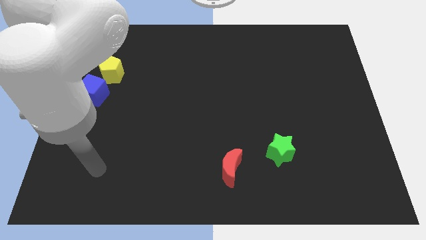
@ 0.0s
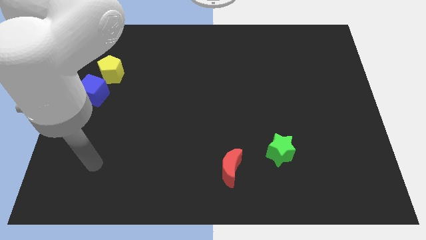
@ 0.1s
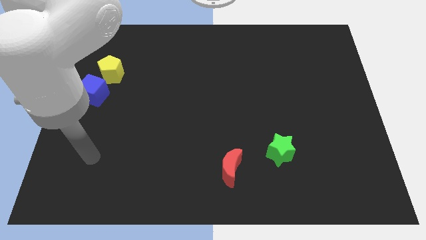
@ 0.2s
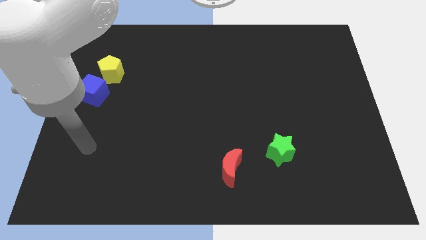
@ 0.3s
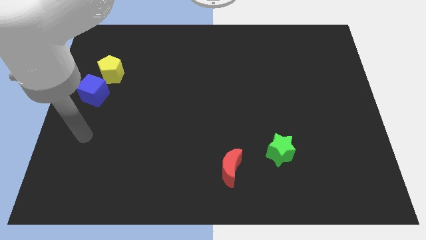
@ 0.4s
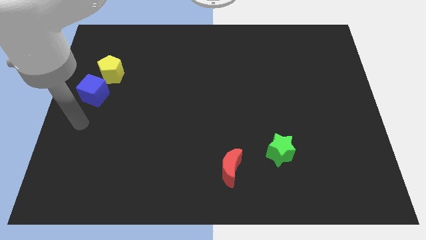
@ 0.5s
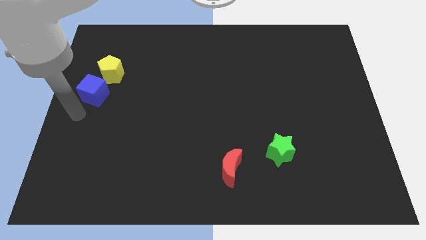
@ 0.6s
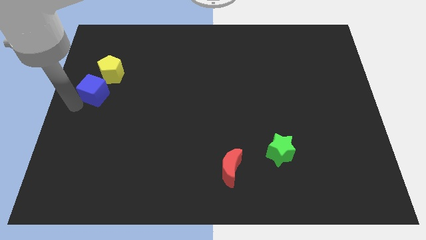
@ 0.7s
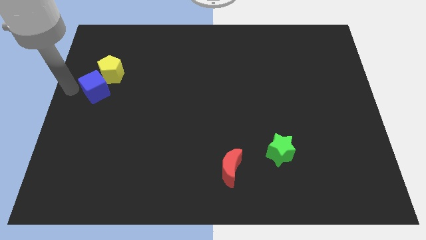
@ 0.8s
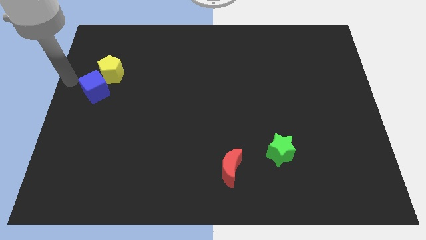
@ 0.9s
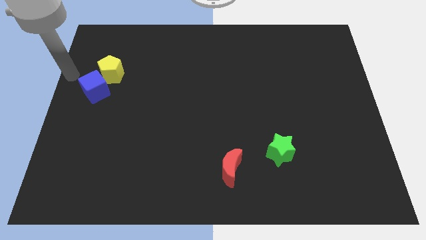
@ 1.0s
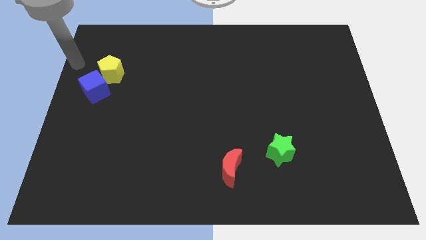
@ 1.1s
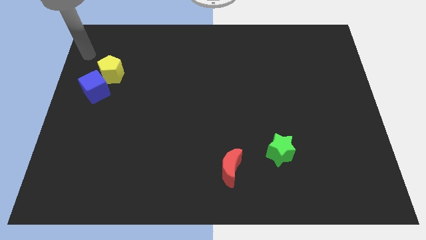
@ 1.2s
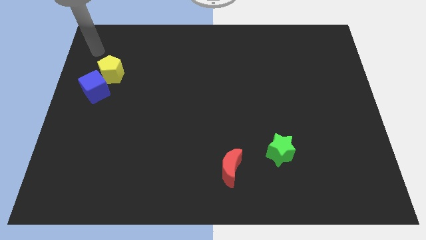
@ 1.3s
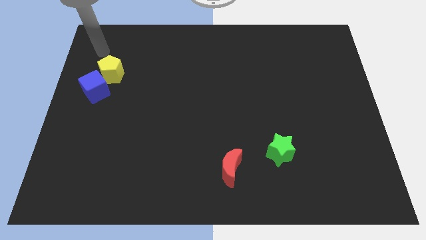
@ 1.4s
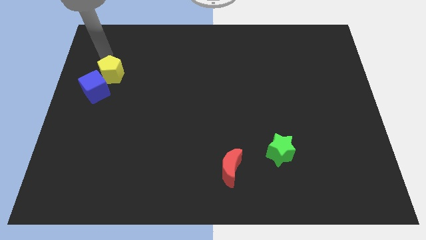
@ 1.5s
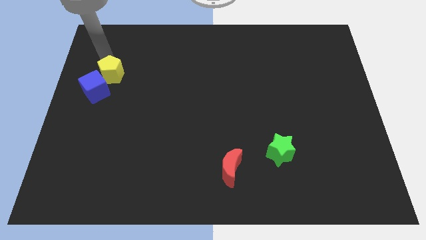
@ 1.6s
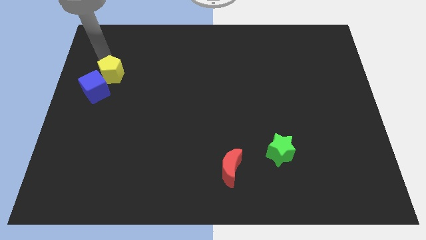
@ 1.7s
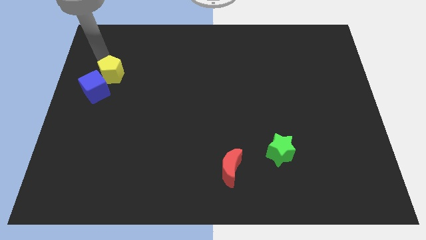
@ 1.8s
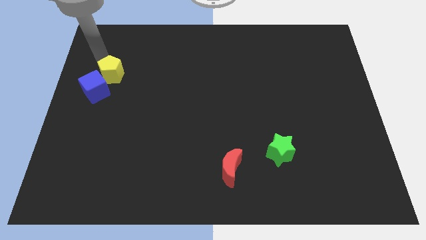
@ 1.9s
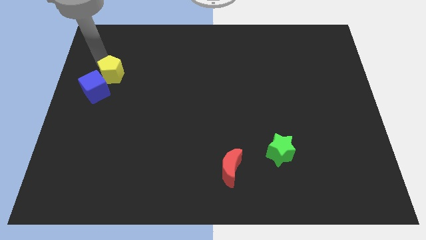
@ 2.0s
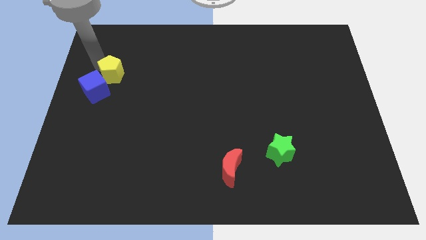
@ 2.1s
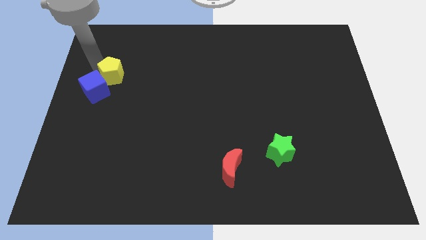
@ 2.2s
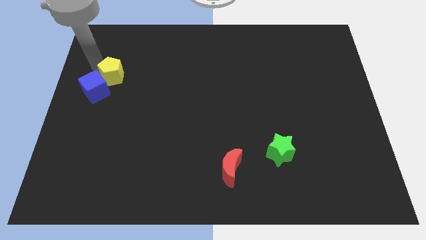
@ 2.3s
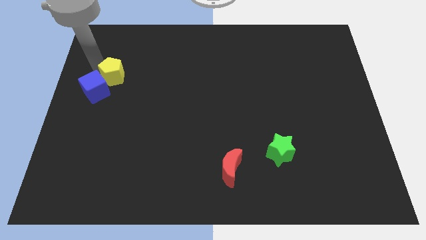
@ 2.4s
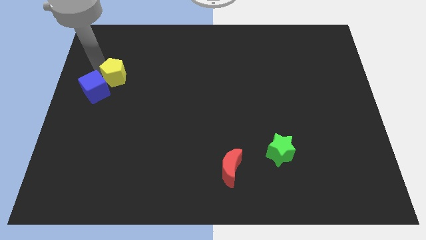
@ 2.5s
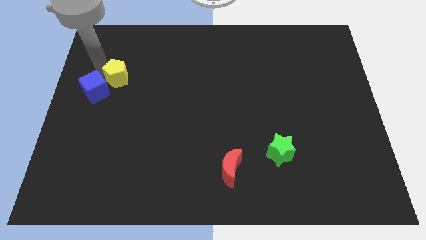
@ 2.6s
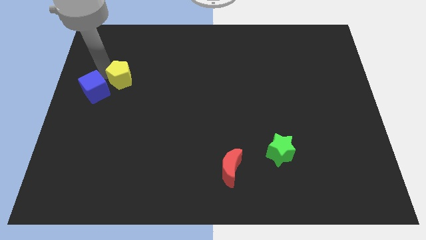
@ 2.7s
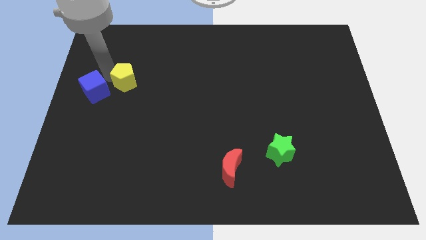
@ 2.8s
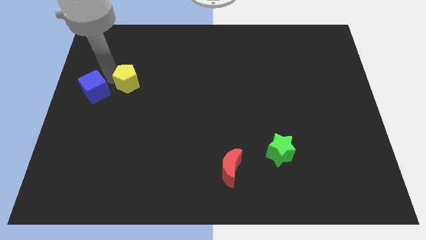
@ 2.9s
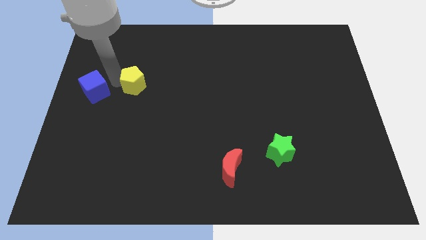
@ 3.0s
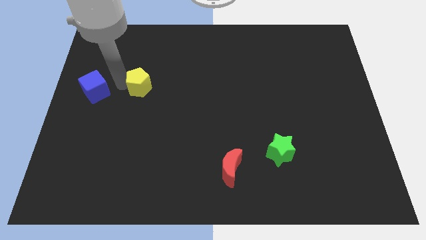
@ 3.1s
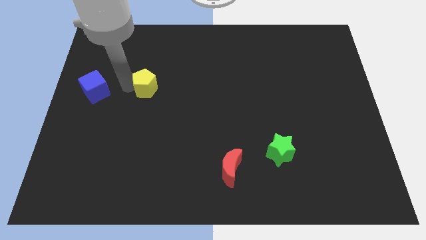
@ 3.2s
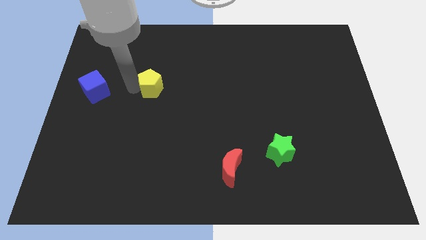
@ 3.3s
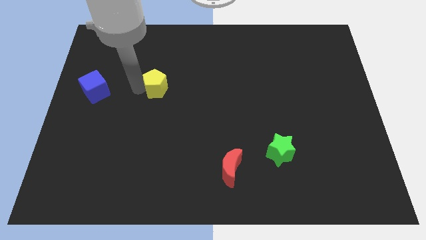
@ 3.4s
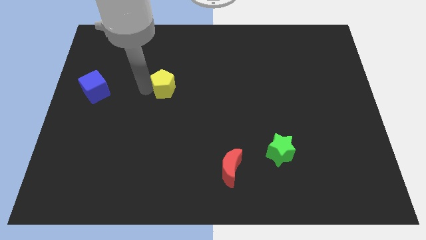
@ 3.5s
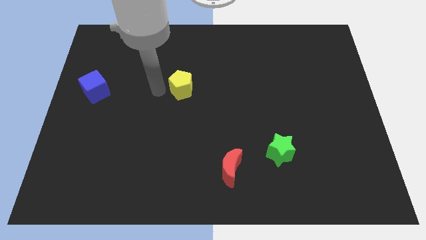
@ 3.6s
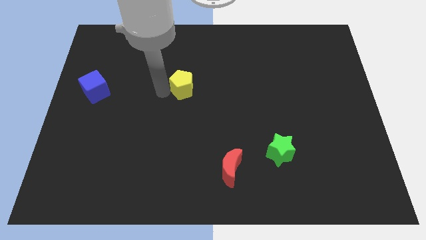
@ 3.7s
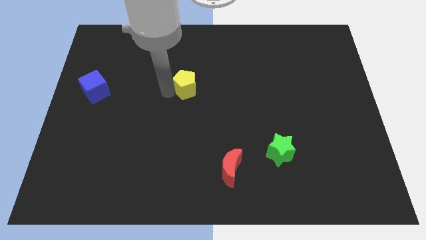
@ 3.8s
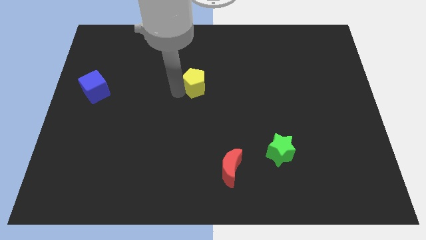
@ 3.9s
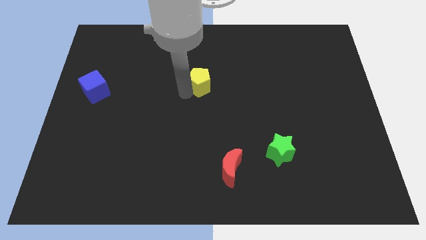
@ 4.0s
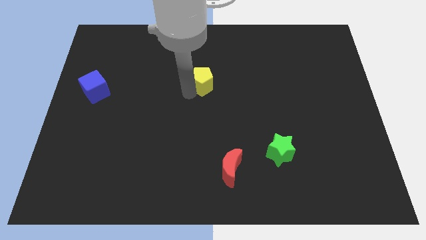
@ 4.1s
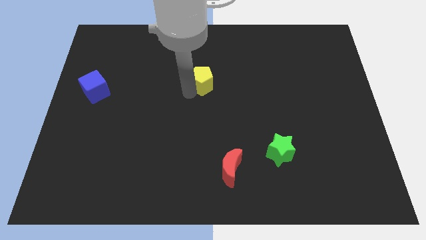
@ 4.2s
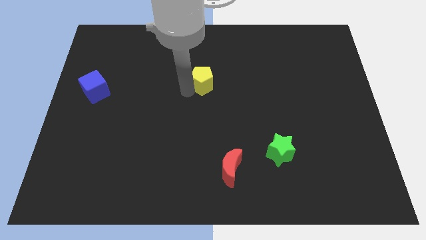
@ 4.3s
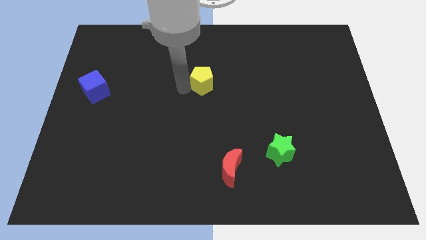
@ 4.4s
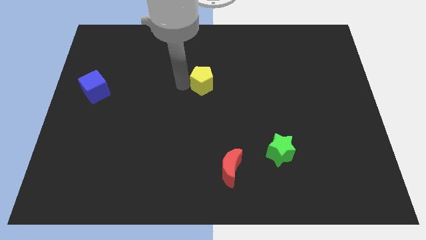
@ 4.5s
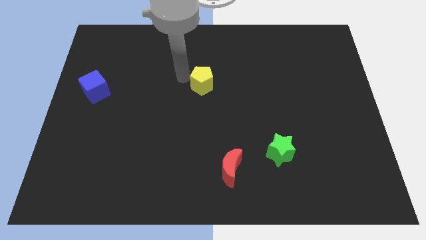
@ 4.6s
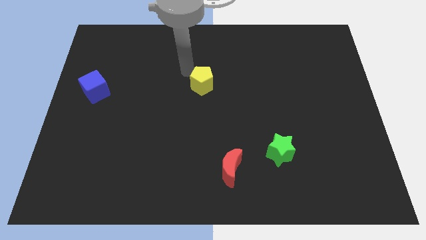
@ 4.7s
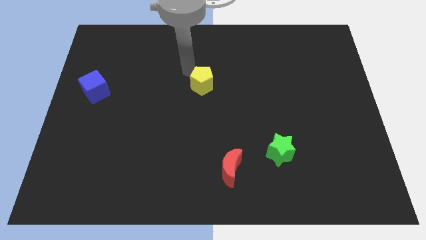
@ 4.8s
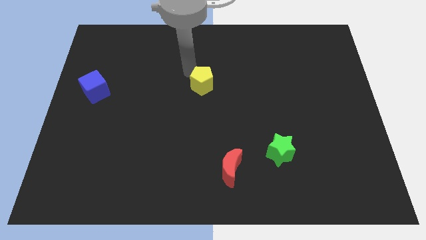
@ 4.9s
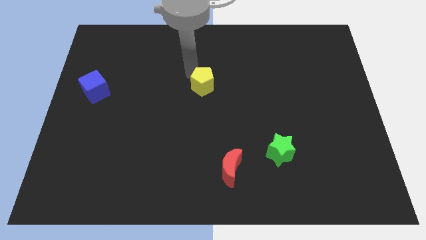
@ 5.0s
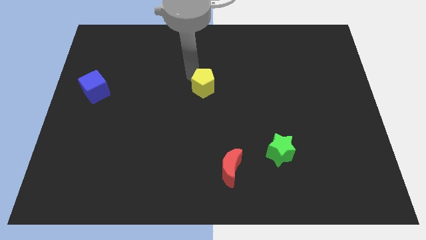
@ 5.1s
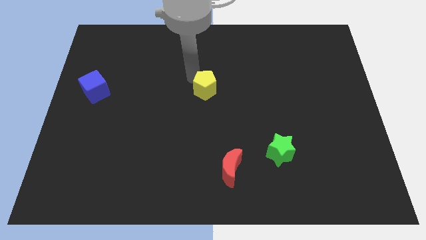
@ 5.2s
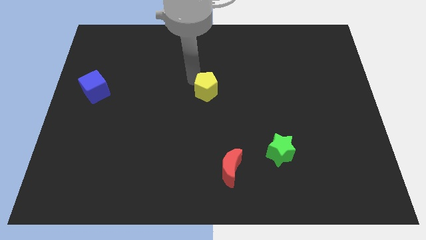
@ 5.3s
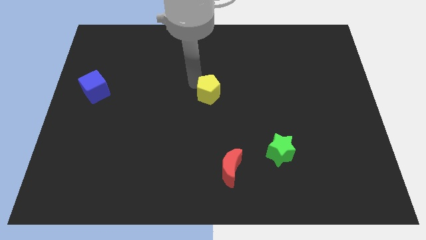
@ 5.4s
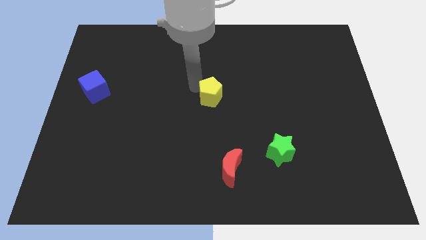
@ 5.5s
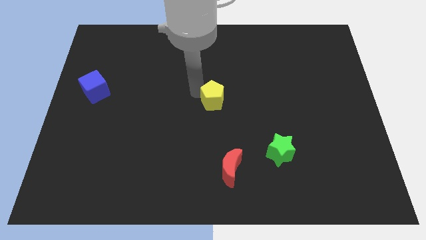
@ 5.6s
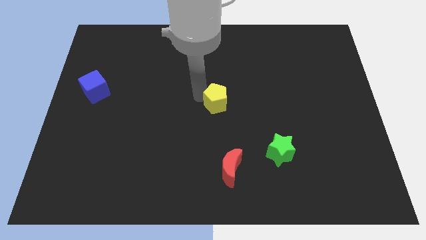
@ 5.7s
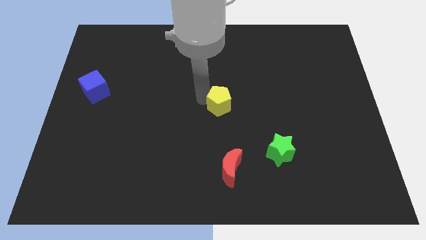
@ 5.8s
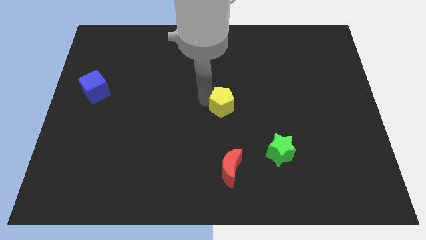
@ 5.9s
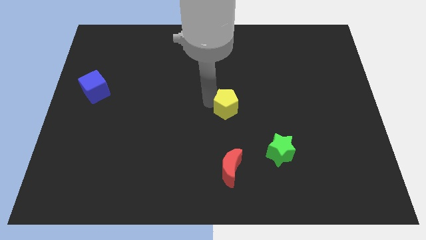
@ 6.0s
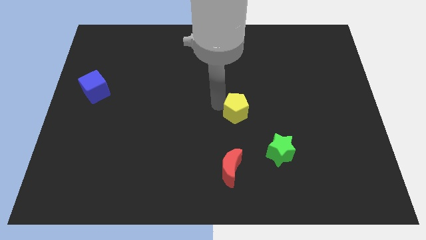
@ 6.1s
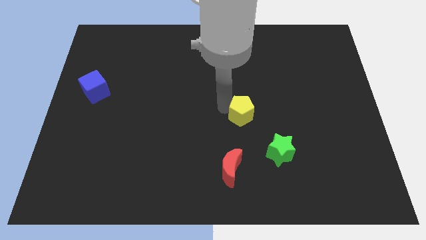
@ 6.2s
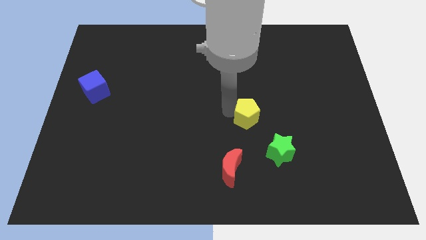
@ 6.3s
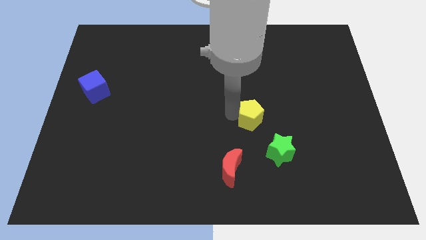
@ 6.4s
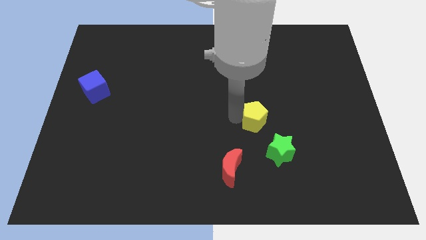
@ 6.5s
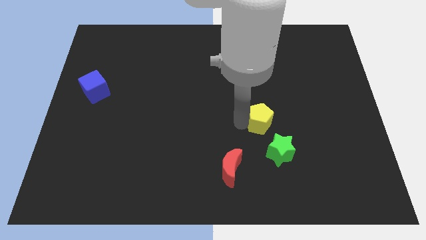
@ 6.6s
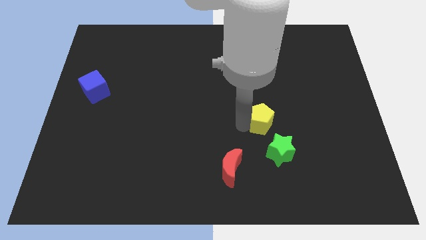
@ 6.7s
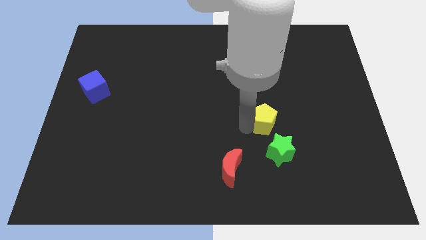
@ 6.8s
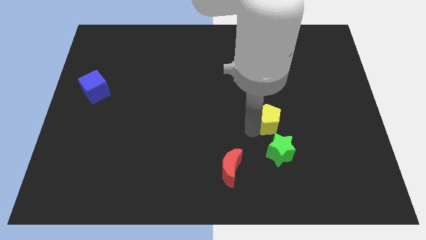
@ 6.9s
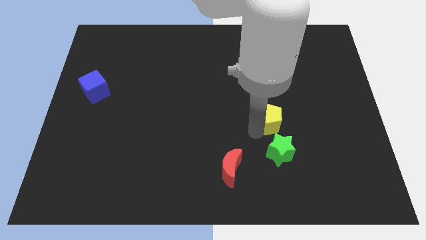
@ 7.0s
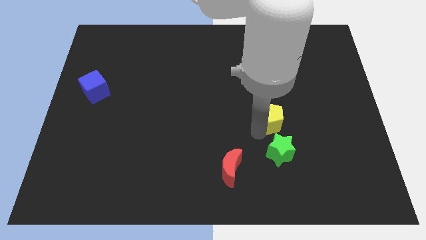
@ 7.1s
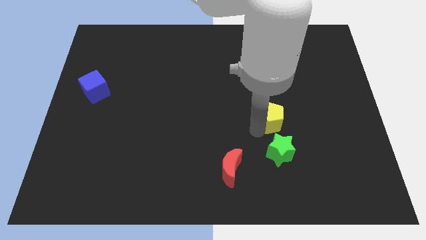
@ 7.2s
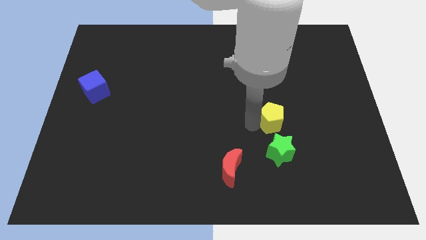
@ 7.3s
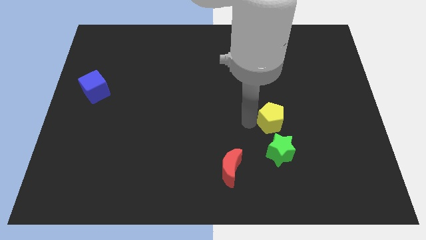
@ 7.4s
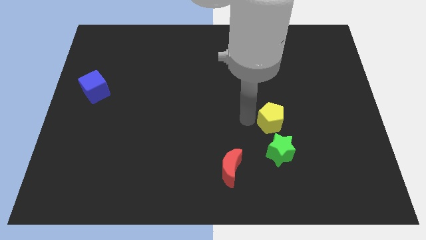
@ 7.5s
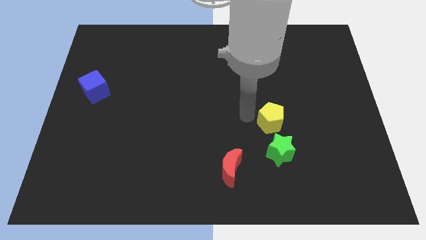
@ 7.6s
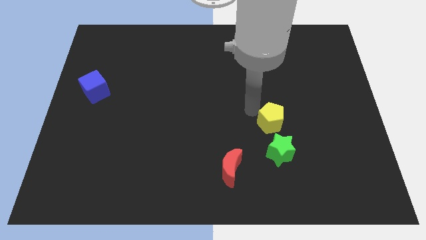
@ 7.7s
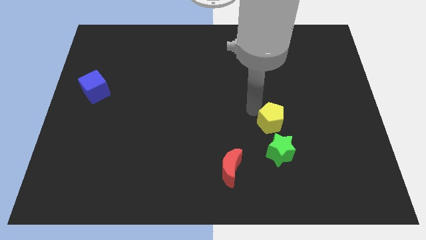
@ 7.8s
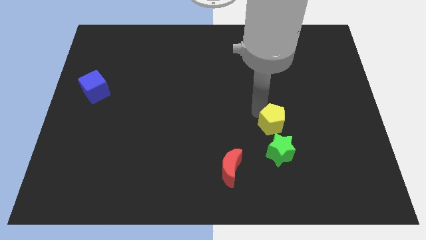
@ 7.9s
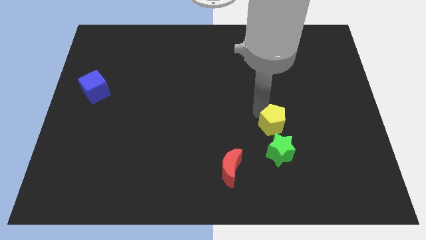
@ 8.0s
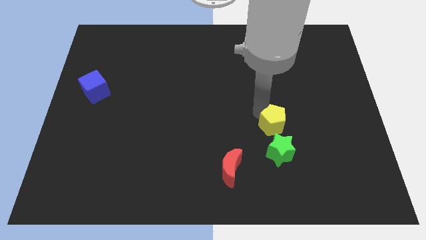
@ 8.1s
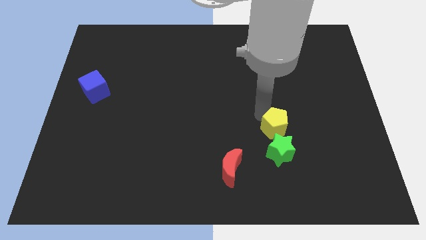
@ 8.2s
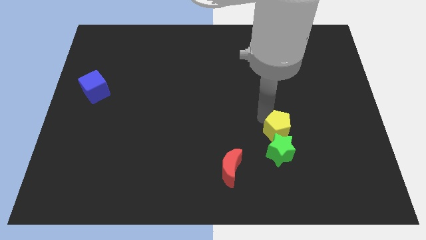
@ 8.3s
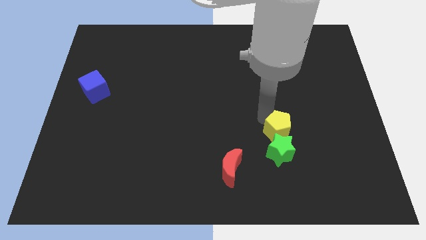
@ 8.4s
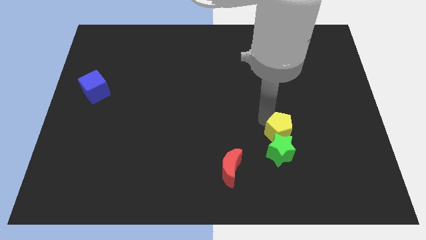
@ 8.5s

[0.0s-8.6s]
move the yellow pentagon towards the green block
